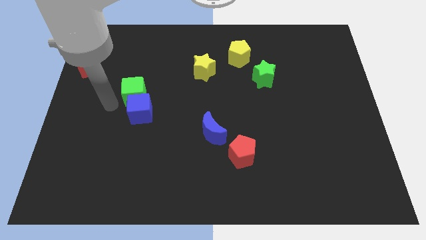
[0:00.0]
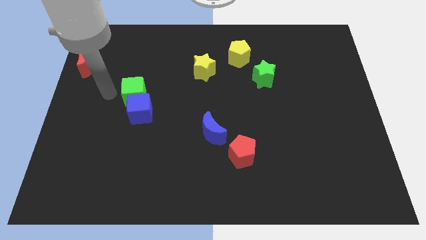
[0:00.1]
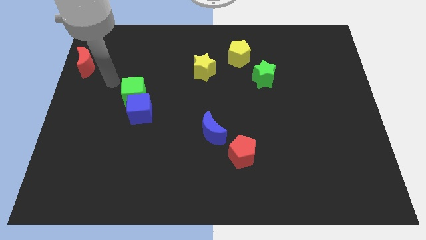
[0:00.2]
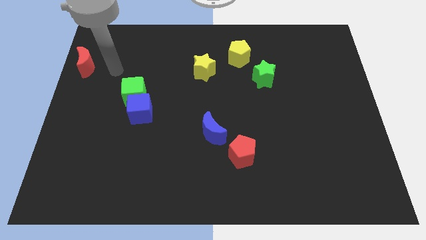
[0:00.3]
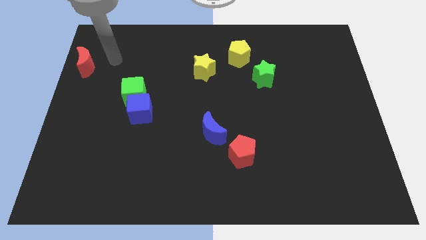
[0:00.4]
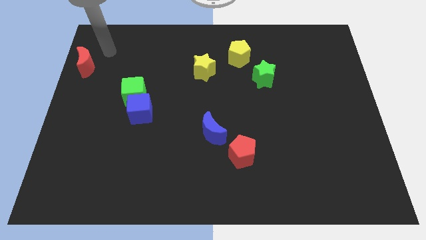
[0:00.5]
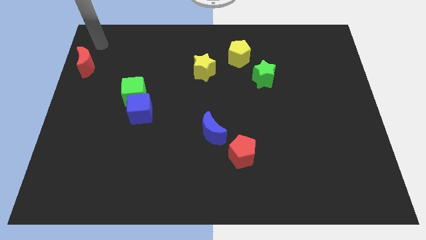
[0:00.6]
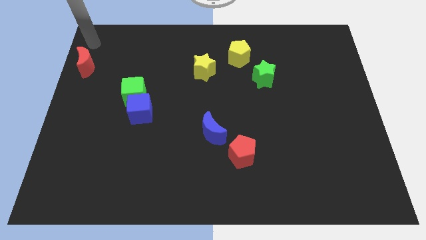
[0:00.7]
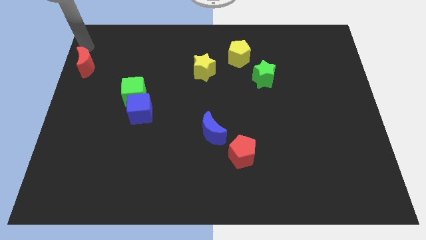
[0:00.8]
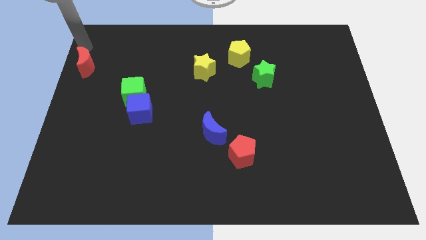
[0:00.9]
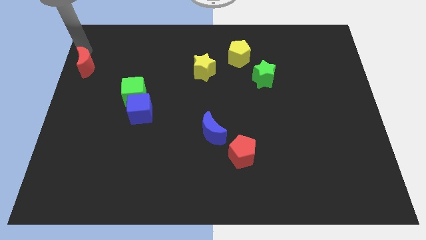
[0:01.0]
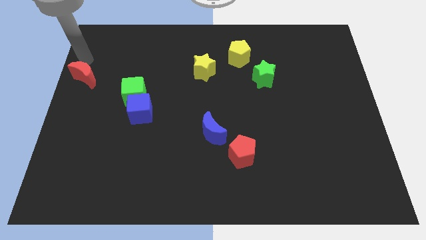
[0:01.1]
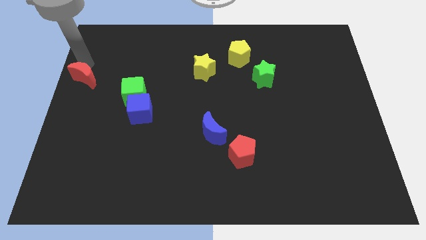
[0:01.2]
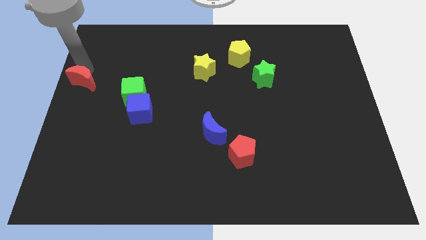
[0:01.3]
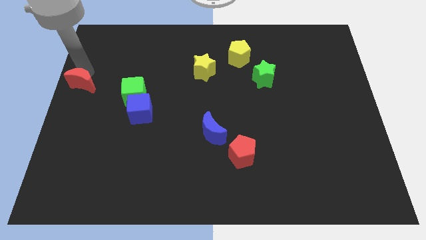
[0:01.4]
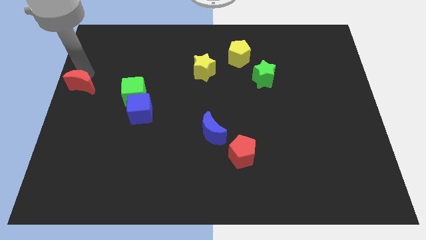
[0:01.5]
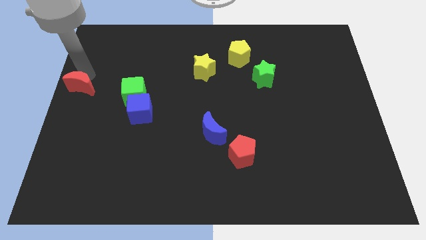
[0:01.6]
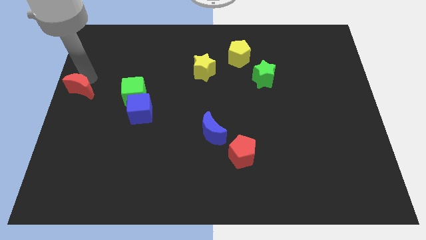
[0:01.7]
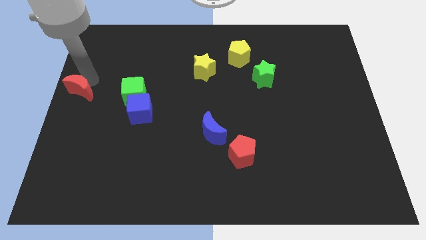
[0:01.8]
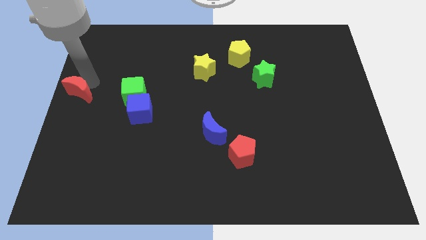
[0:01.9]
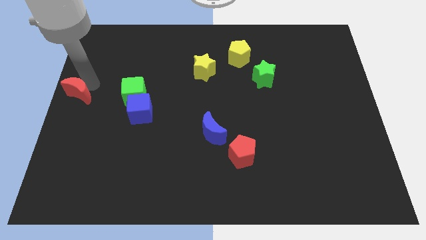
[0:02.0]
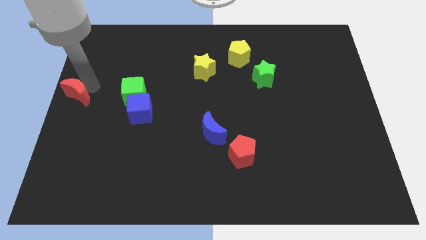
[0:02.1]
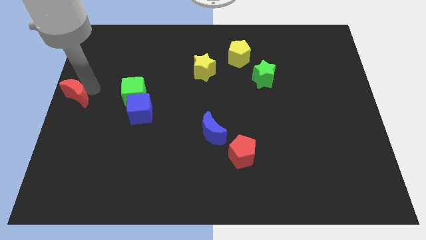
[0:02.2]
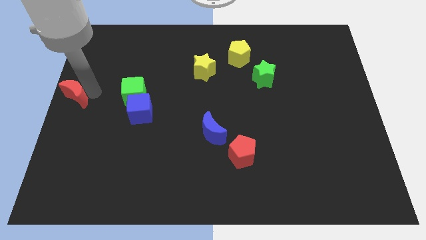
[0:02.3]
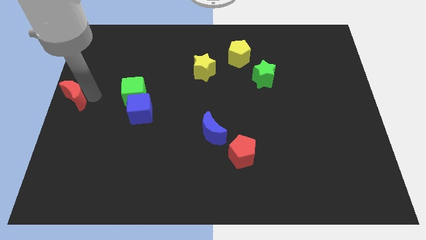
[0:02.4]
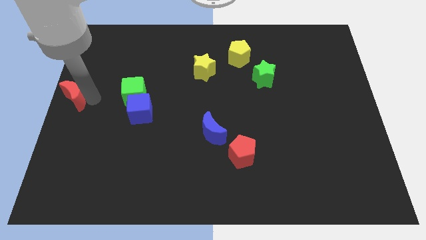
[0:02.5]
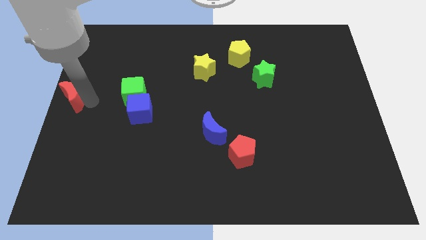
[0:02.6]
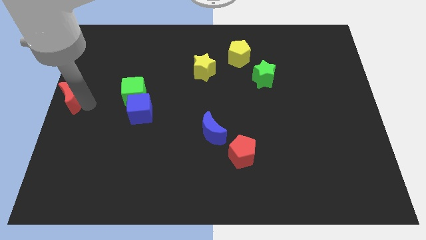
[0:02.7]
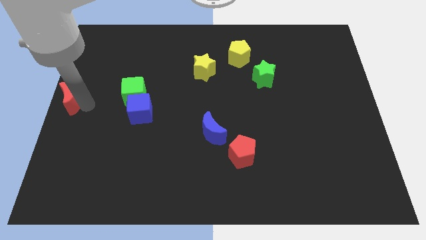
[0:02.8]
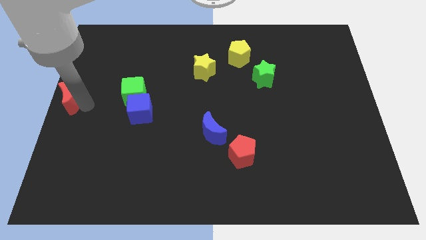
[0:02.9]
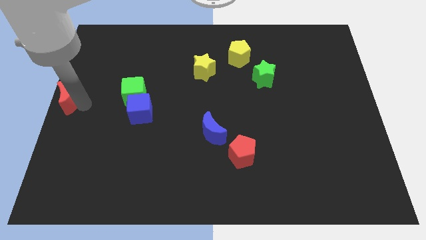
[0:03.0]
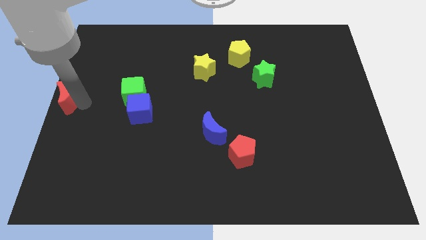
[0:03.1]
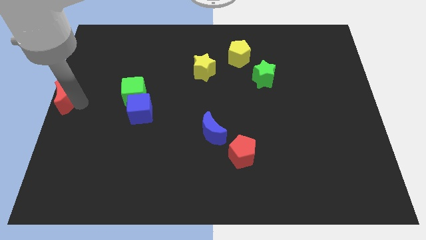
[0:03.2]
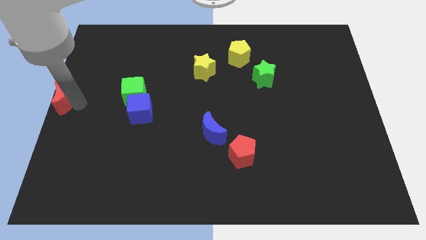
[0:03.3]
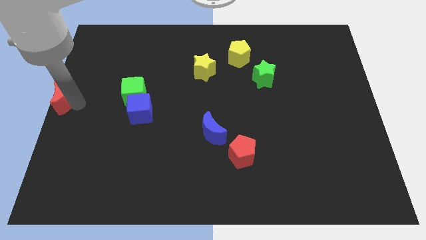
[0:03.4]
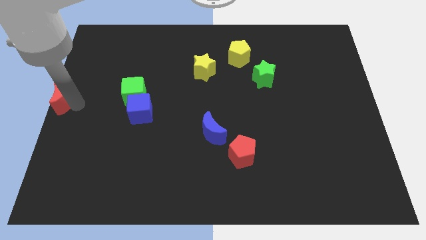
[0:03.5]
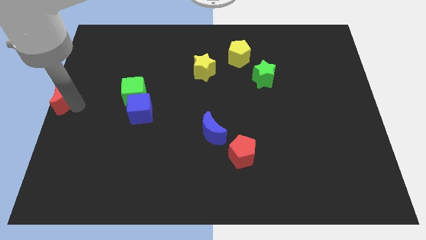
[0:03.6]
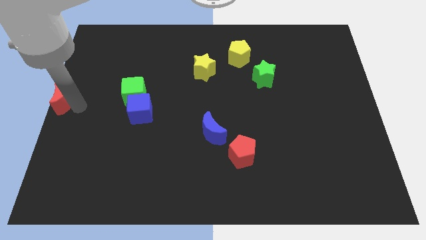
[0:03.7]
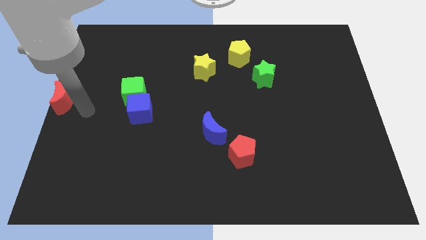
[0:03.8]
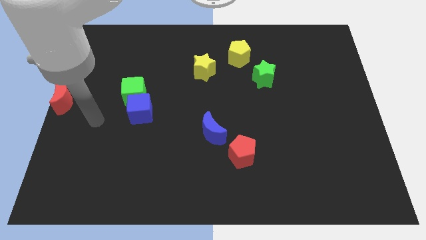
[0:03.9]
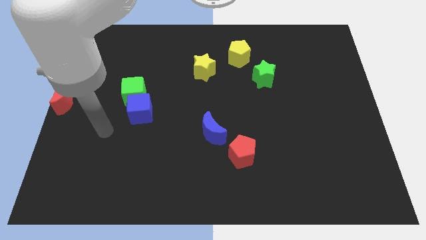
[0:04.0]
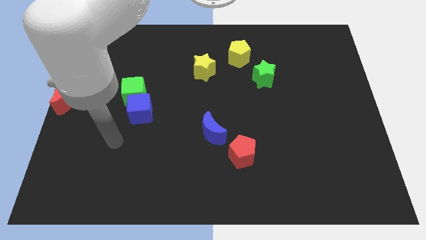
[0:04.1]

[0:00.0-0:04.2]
place the red moon to the center left of the board

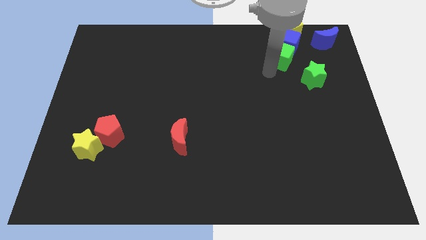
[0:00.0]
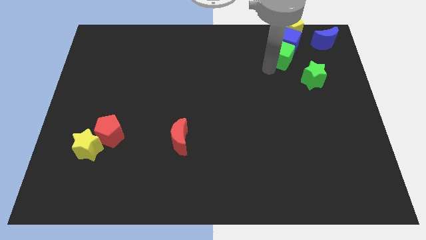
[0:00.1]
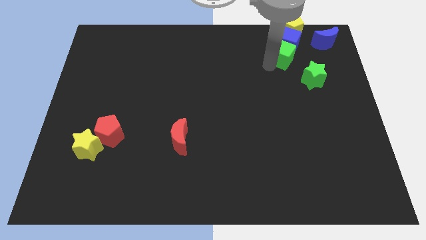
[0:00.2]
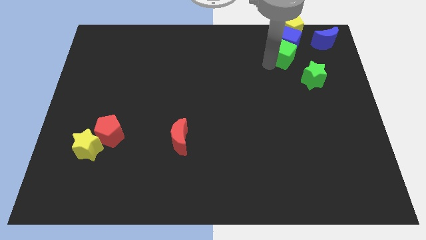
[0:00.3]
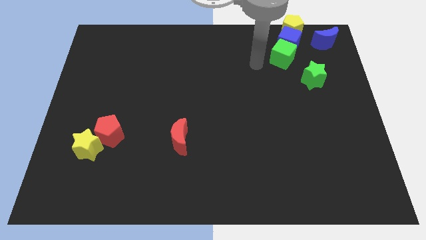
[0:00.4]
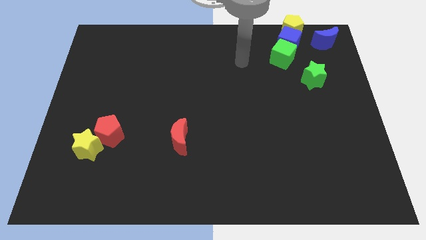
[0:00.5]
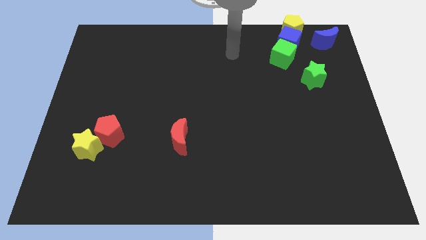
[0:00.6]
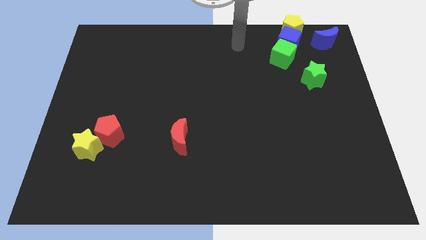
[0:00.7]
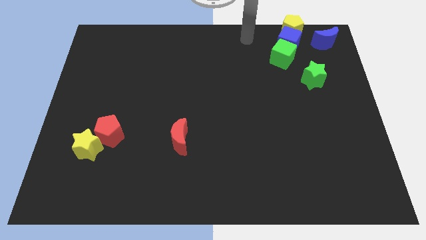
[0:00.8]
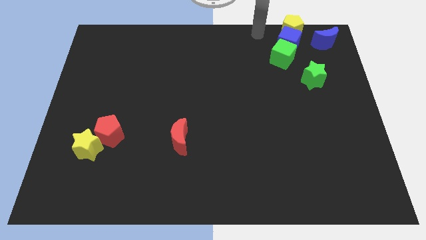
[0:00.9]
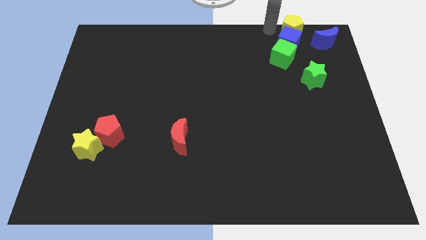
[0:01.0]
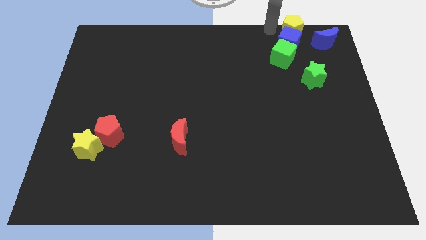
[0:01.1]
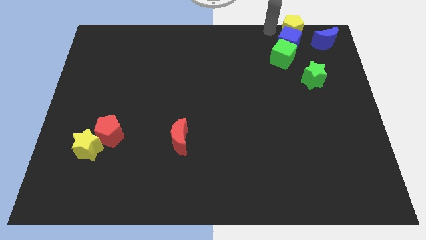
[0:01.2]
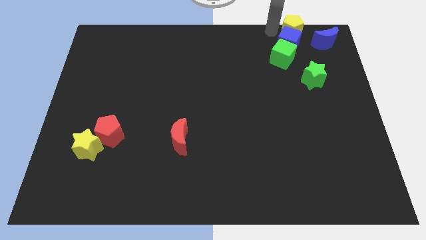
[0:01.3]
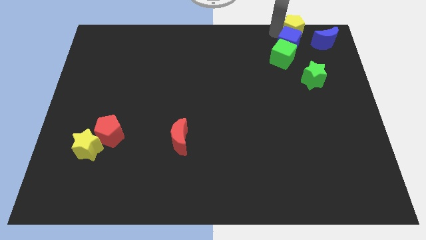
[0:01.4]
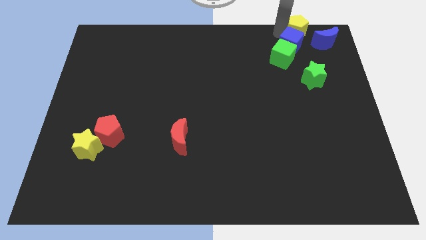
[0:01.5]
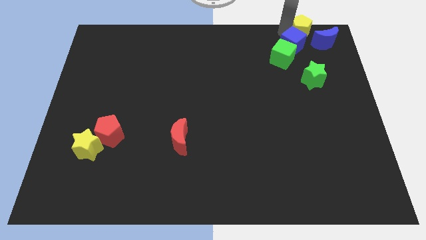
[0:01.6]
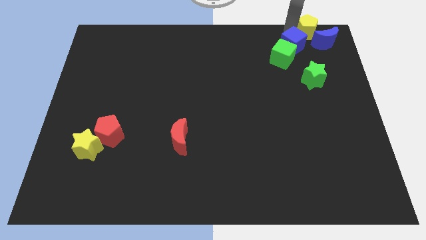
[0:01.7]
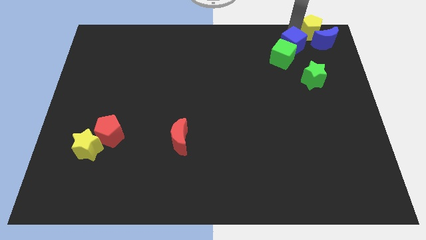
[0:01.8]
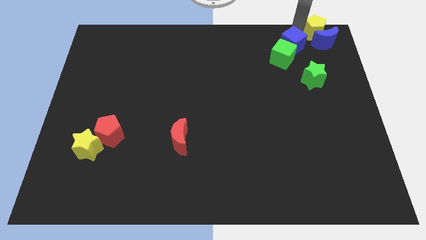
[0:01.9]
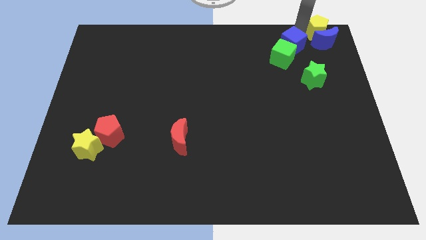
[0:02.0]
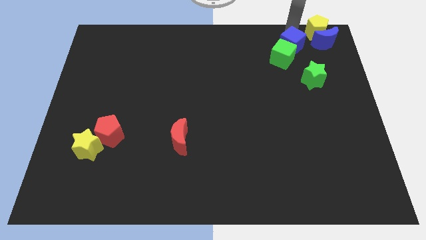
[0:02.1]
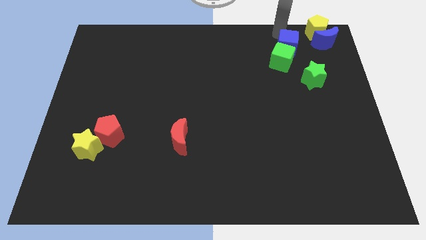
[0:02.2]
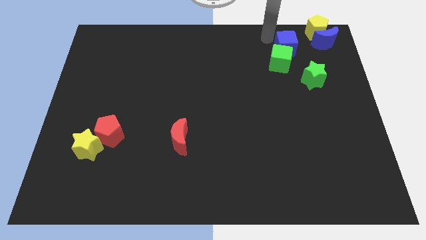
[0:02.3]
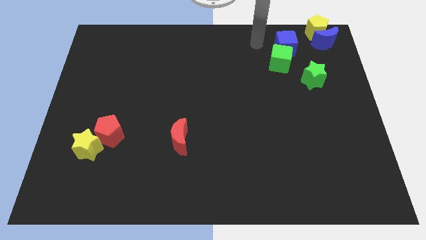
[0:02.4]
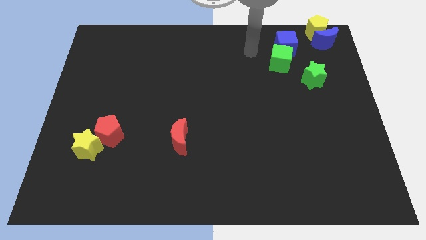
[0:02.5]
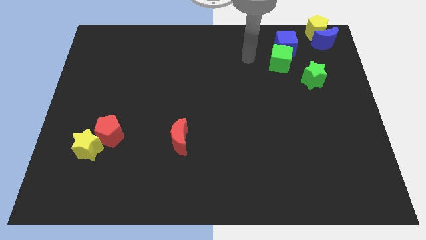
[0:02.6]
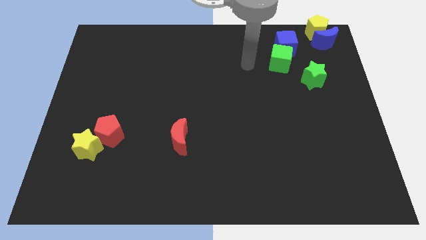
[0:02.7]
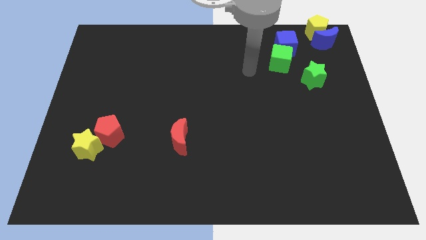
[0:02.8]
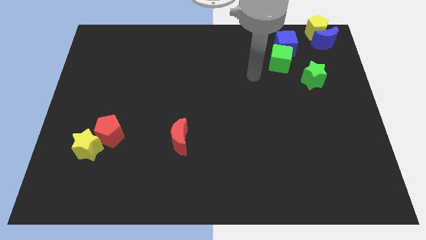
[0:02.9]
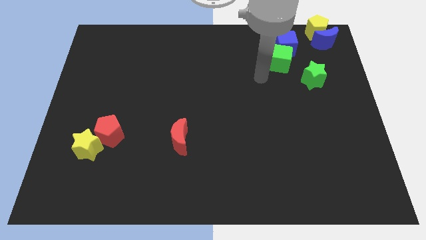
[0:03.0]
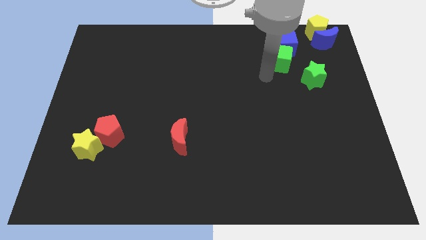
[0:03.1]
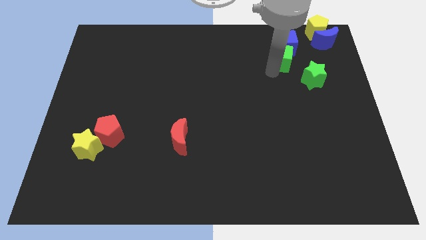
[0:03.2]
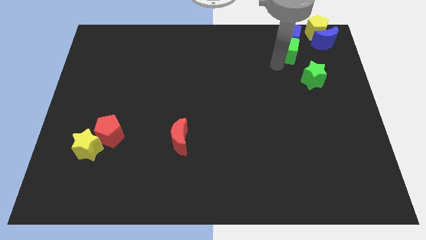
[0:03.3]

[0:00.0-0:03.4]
push the yellow pentagon to the top of the blue crescent

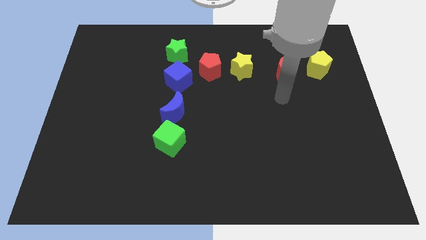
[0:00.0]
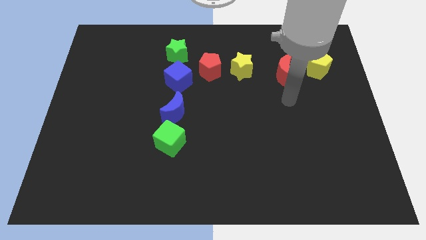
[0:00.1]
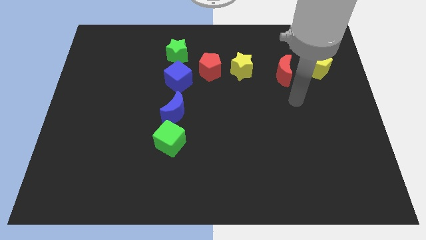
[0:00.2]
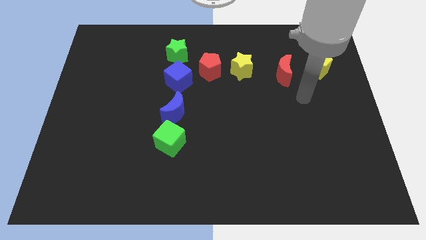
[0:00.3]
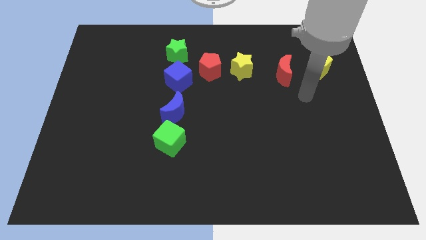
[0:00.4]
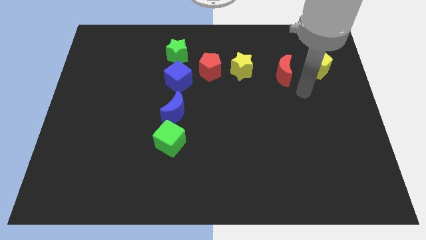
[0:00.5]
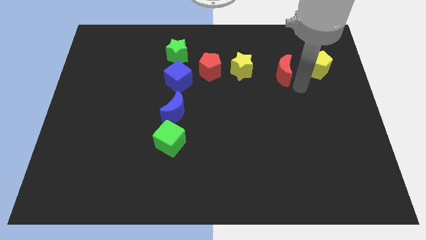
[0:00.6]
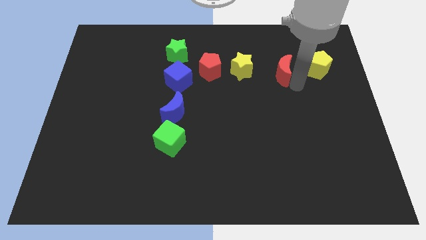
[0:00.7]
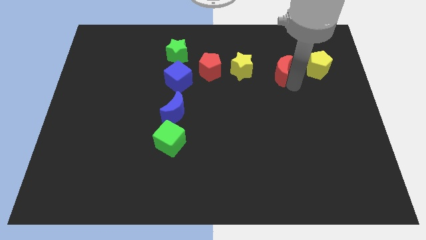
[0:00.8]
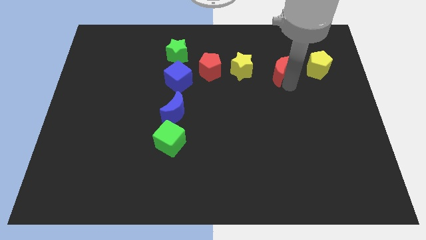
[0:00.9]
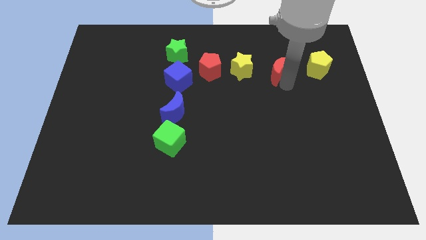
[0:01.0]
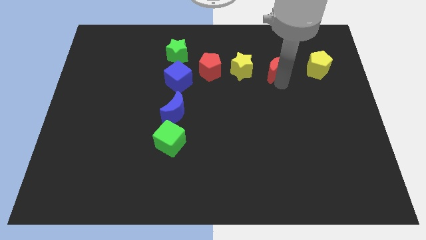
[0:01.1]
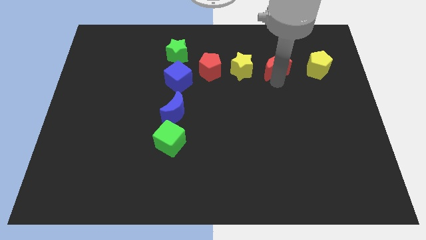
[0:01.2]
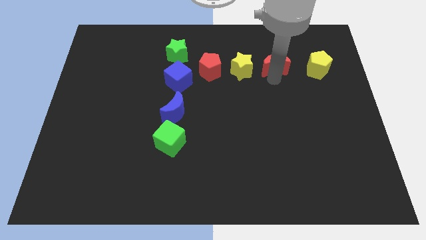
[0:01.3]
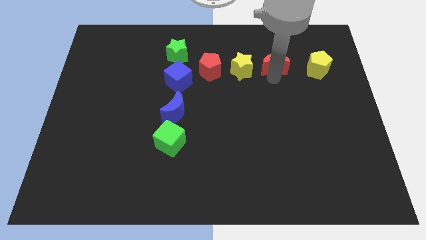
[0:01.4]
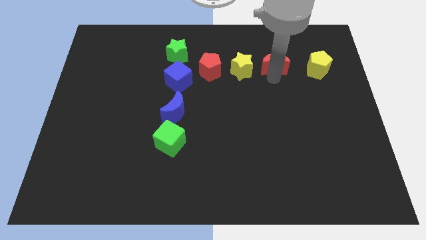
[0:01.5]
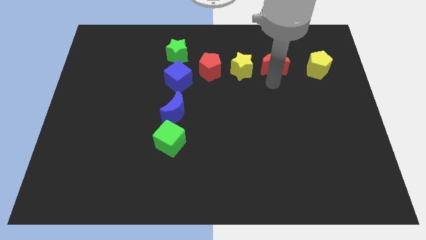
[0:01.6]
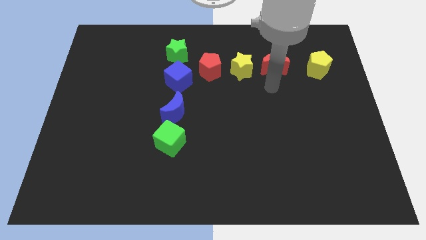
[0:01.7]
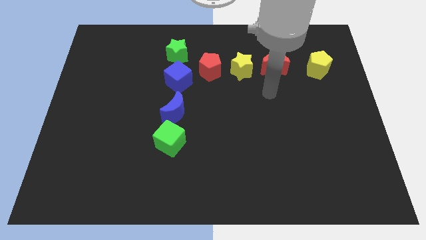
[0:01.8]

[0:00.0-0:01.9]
move the red moon close to the yellow star
